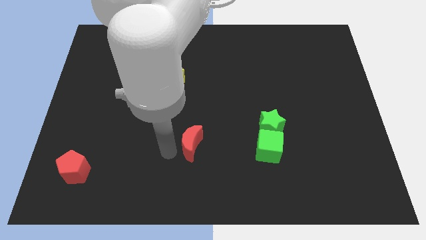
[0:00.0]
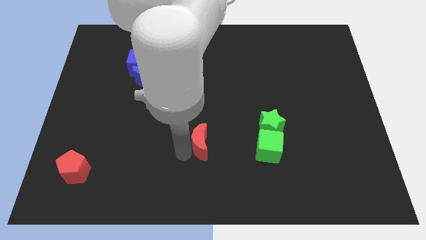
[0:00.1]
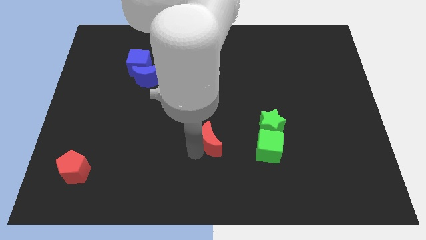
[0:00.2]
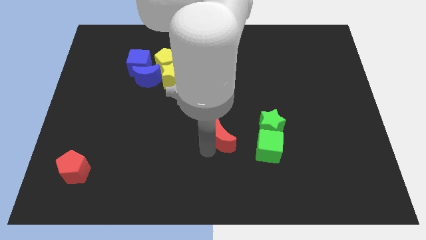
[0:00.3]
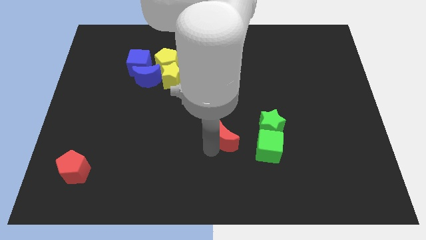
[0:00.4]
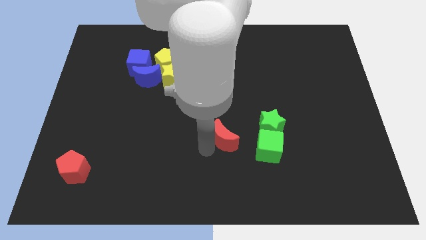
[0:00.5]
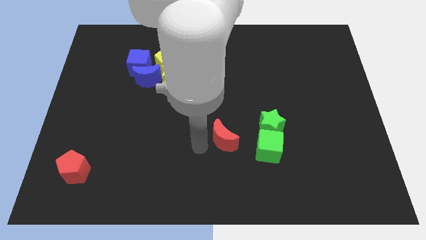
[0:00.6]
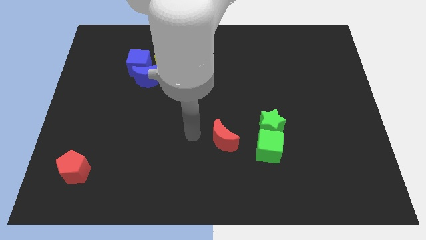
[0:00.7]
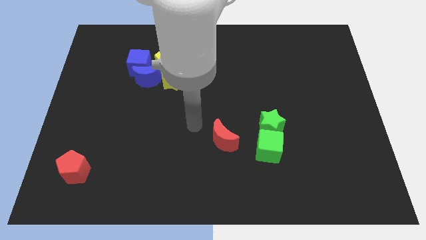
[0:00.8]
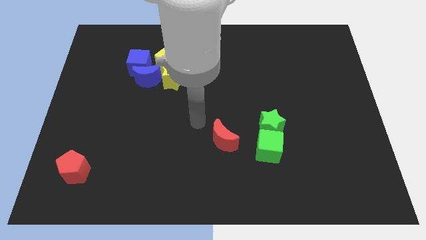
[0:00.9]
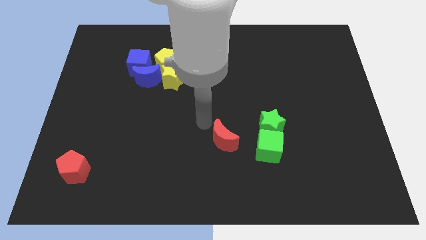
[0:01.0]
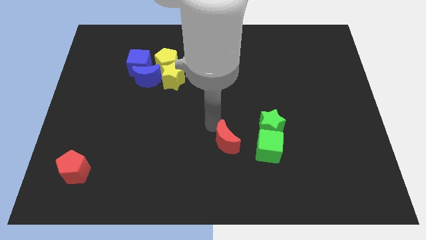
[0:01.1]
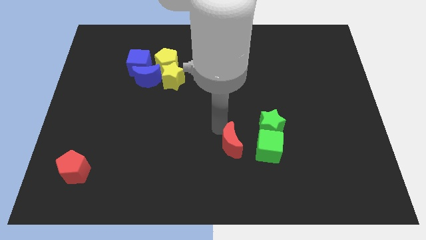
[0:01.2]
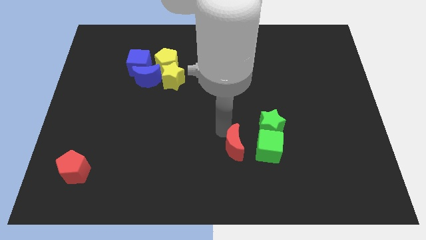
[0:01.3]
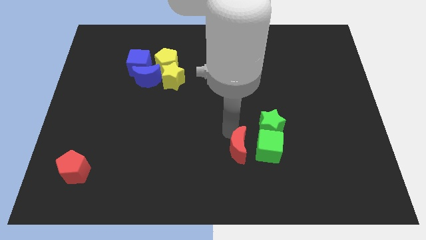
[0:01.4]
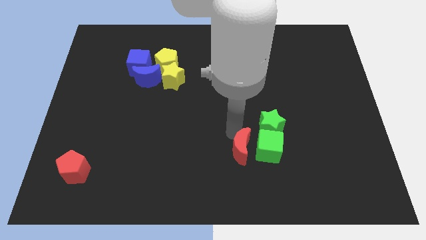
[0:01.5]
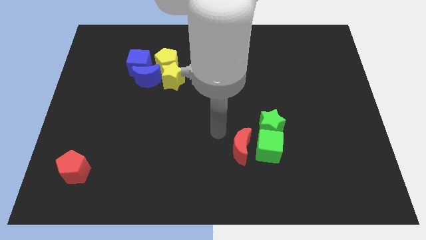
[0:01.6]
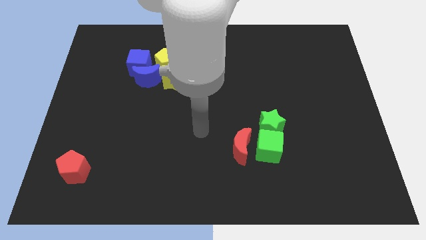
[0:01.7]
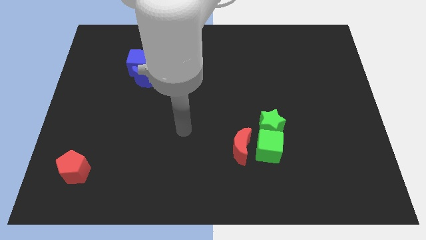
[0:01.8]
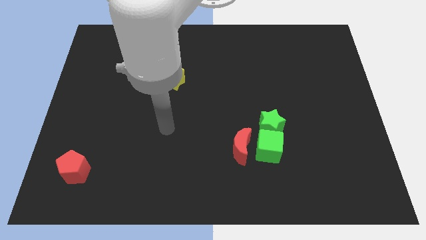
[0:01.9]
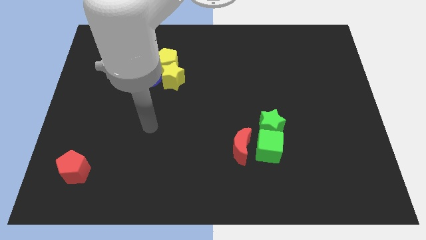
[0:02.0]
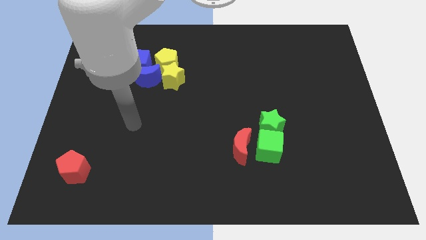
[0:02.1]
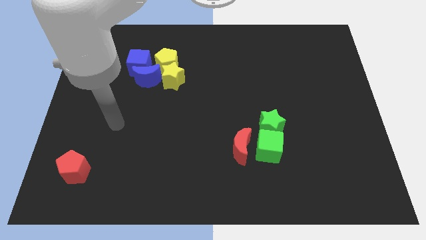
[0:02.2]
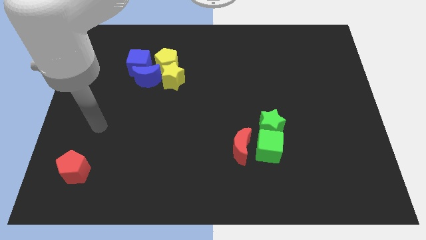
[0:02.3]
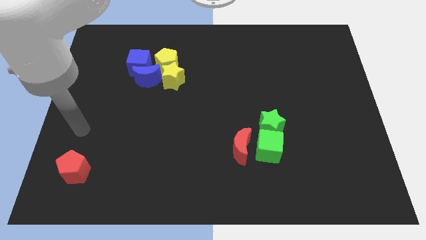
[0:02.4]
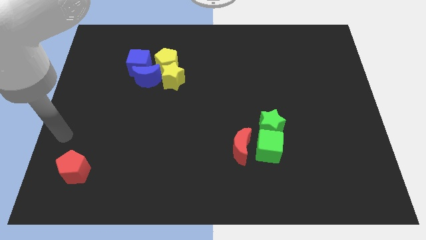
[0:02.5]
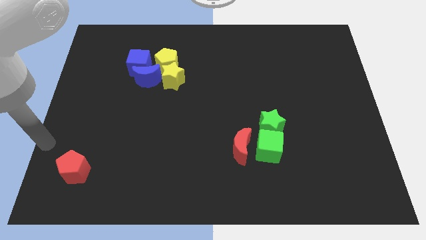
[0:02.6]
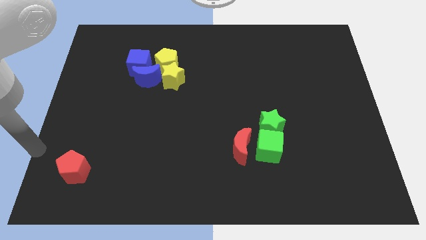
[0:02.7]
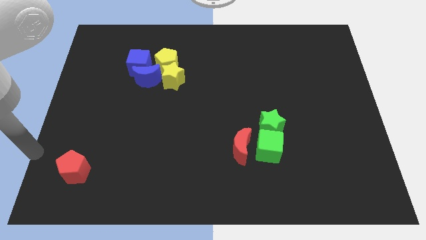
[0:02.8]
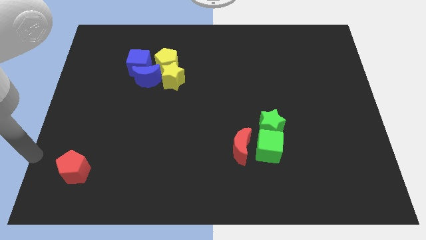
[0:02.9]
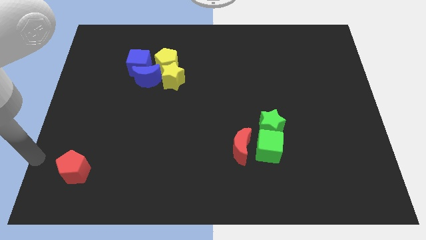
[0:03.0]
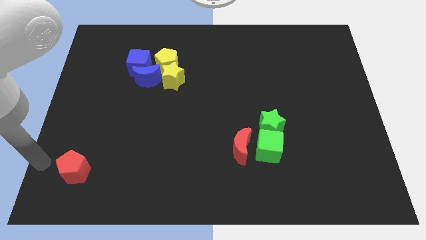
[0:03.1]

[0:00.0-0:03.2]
place the red pentagon to the left side of the green cube

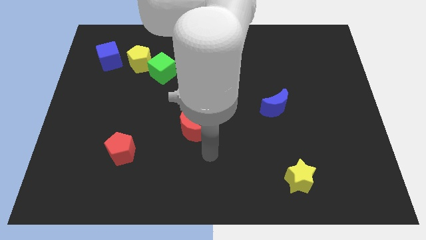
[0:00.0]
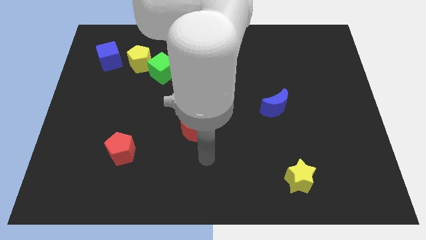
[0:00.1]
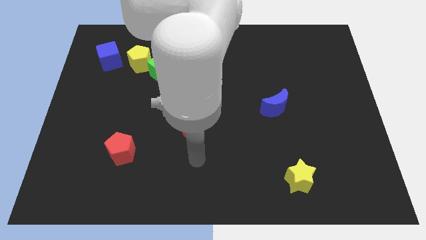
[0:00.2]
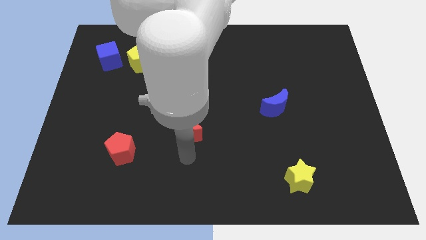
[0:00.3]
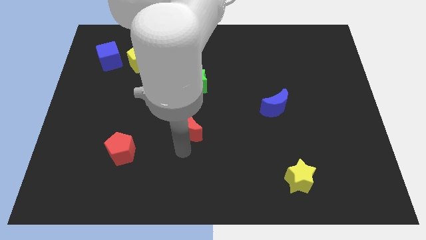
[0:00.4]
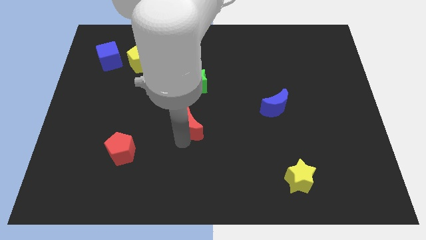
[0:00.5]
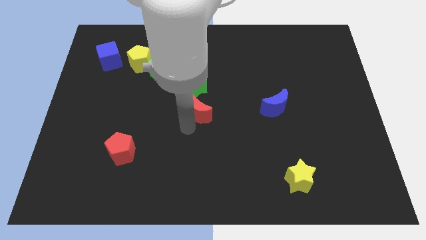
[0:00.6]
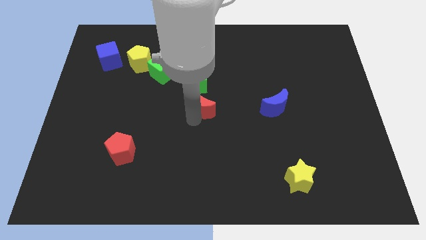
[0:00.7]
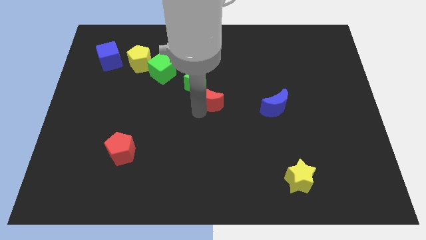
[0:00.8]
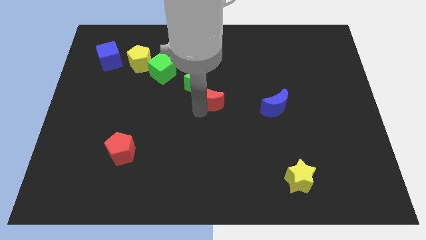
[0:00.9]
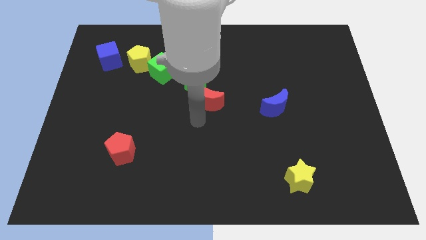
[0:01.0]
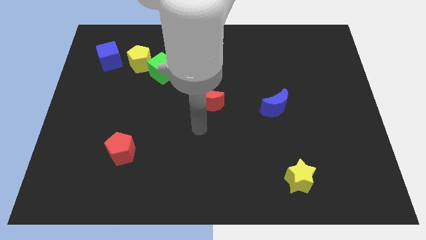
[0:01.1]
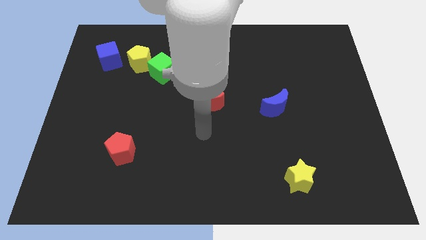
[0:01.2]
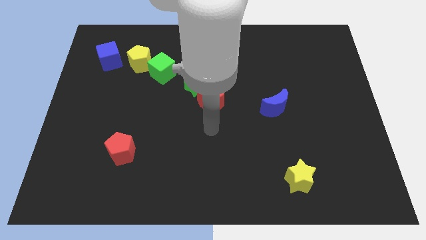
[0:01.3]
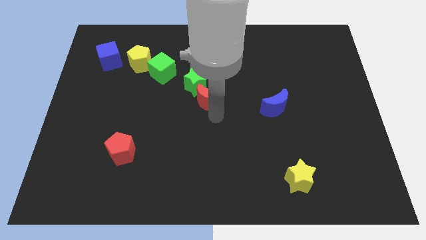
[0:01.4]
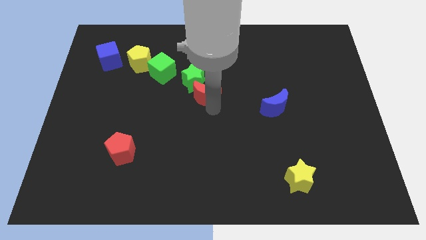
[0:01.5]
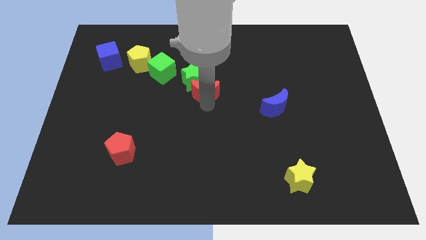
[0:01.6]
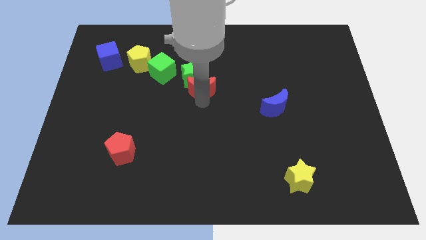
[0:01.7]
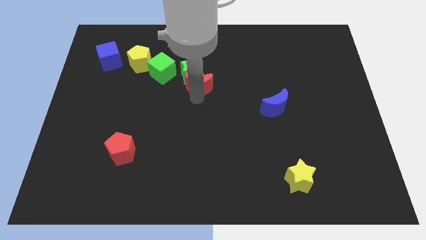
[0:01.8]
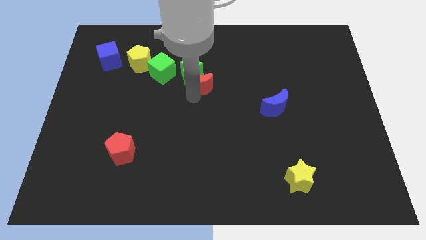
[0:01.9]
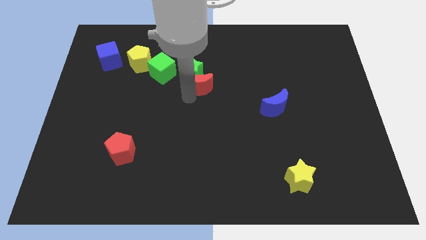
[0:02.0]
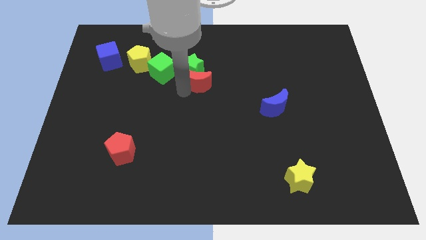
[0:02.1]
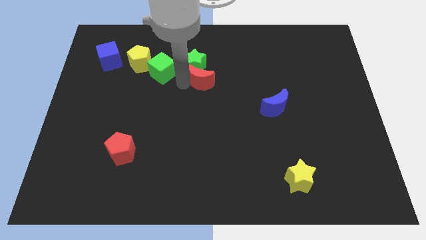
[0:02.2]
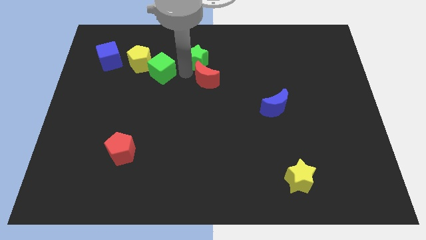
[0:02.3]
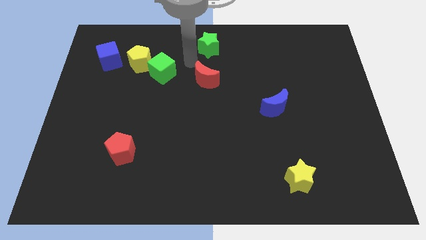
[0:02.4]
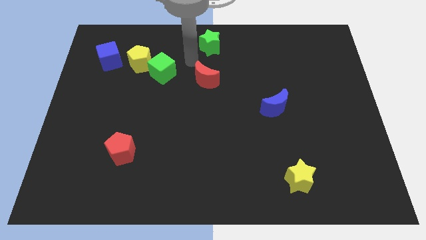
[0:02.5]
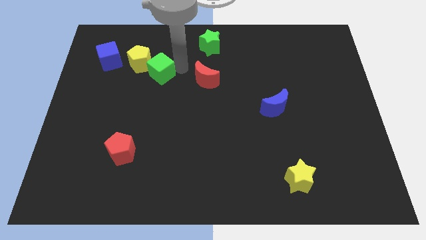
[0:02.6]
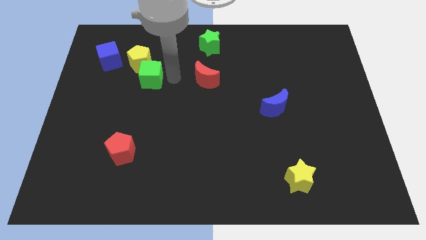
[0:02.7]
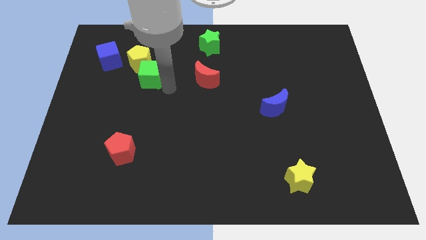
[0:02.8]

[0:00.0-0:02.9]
move the green star to the top center of the board

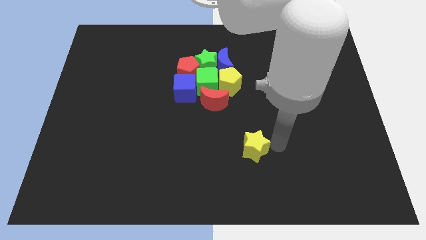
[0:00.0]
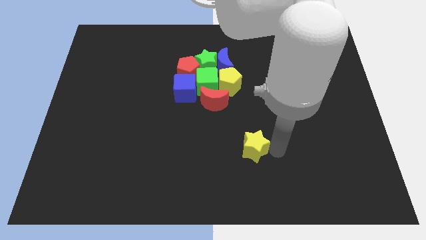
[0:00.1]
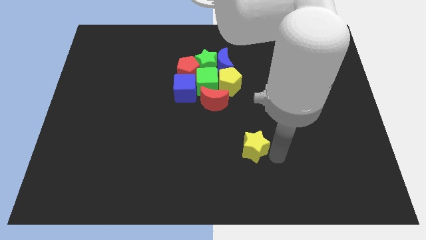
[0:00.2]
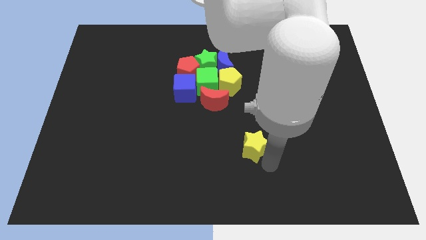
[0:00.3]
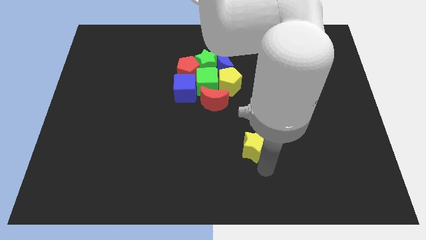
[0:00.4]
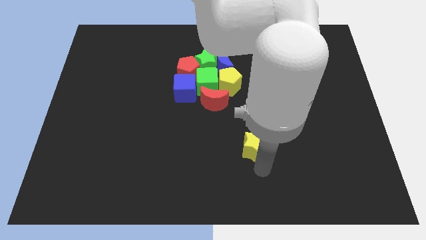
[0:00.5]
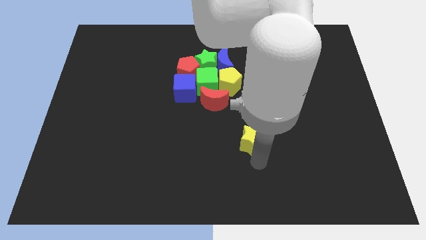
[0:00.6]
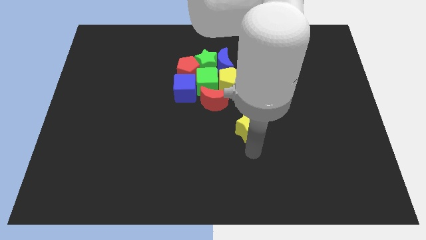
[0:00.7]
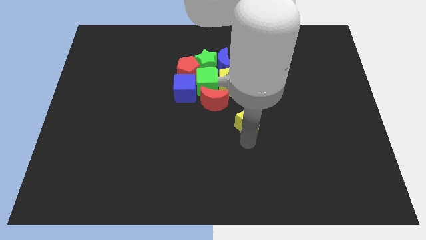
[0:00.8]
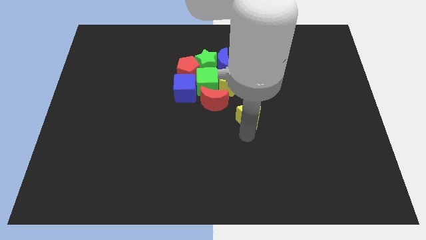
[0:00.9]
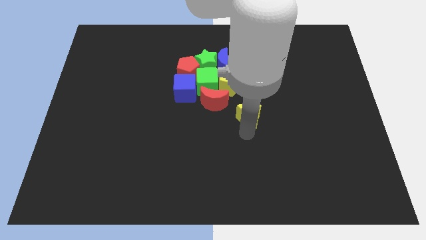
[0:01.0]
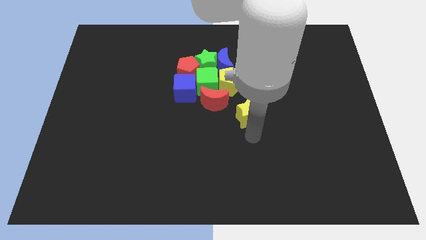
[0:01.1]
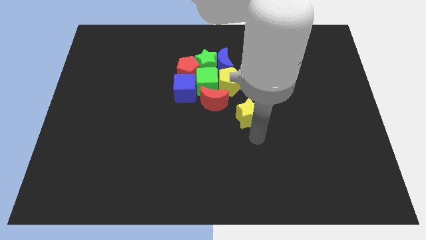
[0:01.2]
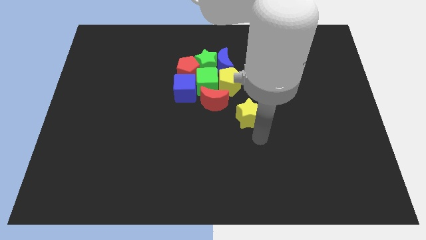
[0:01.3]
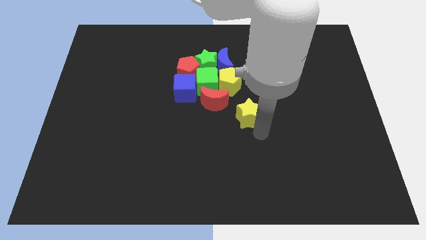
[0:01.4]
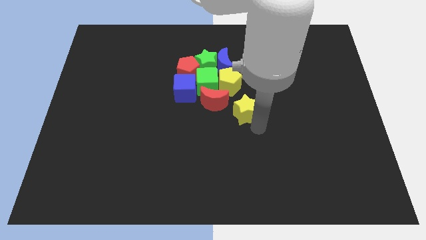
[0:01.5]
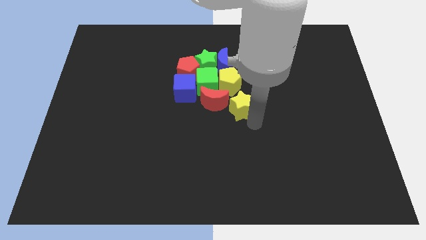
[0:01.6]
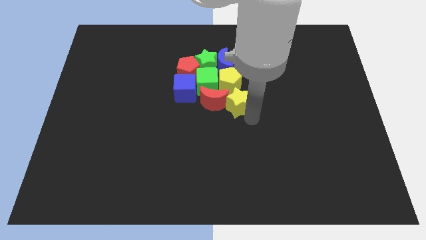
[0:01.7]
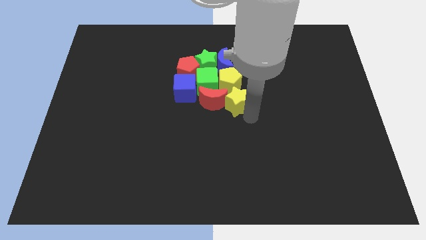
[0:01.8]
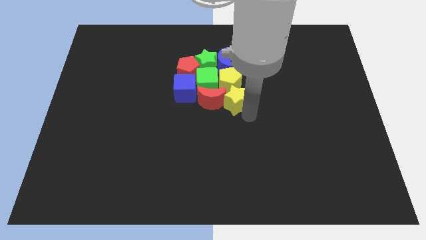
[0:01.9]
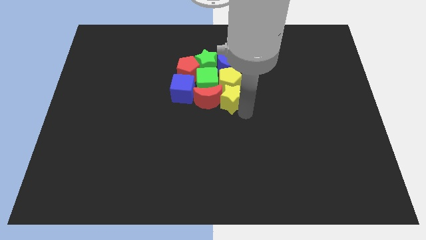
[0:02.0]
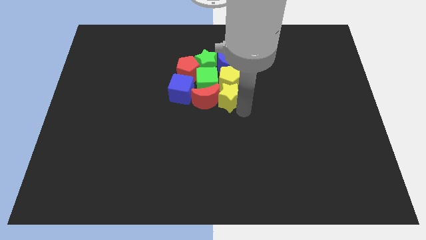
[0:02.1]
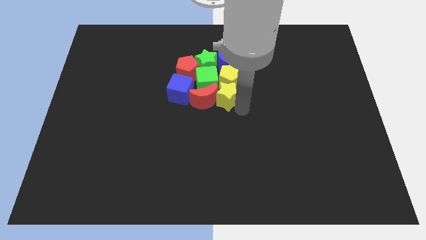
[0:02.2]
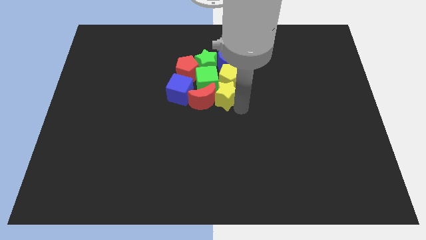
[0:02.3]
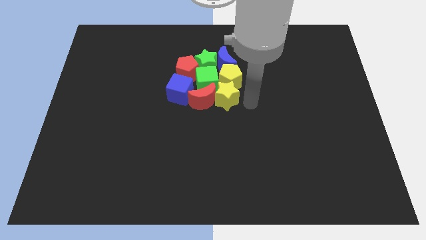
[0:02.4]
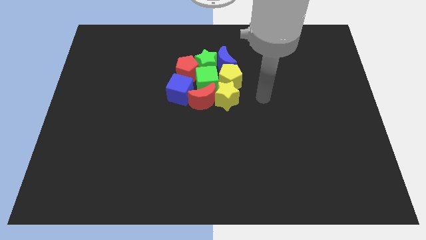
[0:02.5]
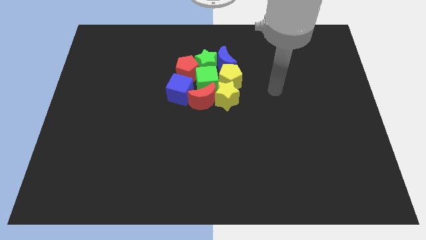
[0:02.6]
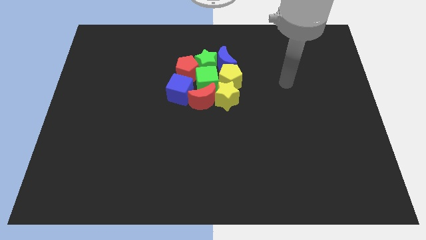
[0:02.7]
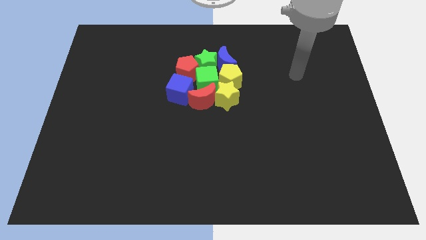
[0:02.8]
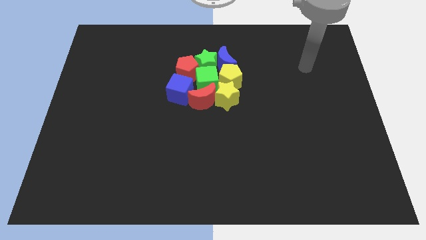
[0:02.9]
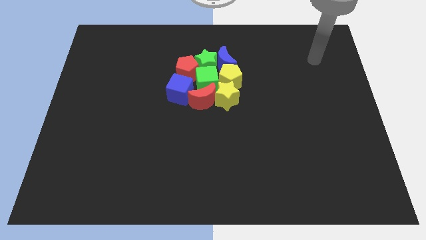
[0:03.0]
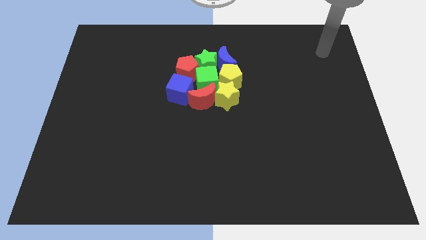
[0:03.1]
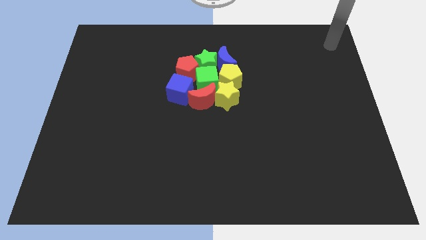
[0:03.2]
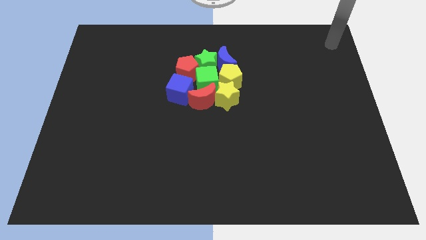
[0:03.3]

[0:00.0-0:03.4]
move the arm to the right top corner of the board
